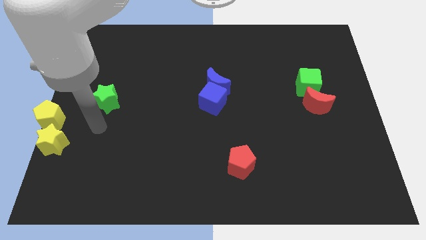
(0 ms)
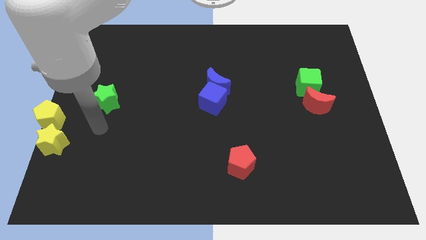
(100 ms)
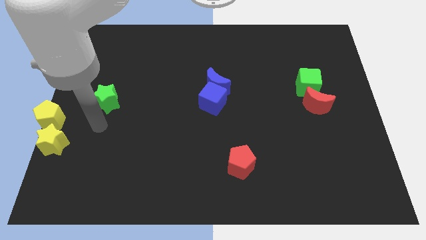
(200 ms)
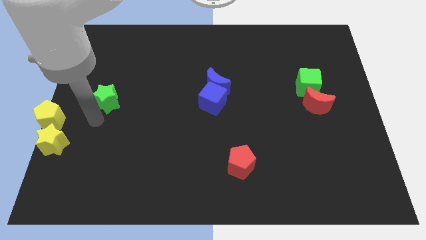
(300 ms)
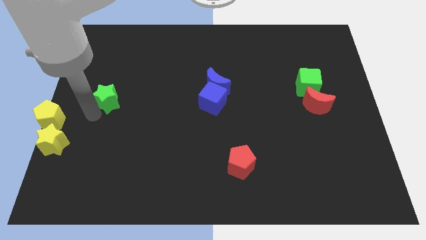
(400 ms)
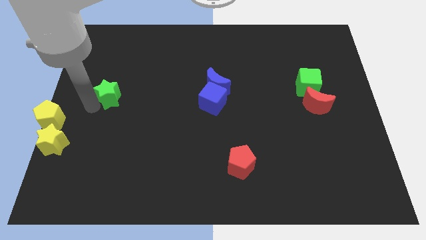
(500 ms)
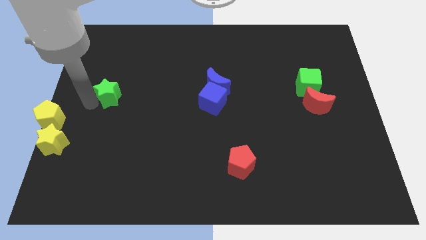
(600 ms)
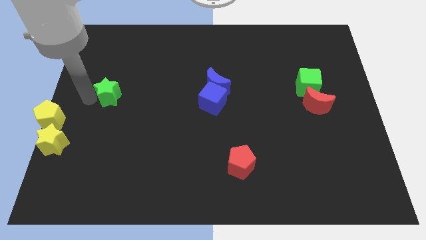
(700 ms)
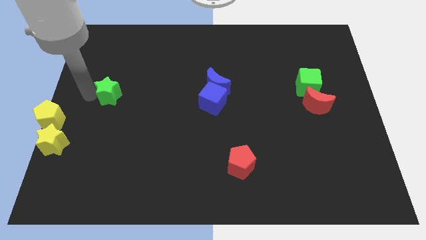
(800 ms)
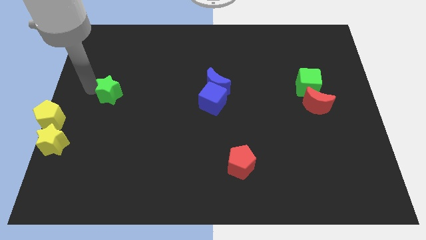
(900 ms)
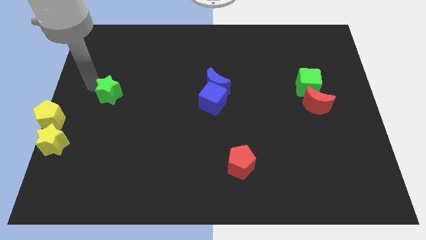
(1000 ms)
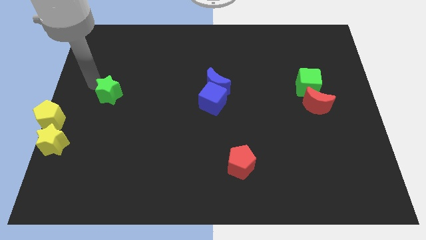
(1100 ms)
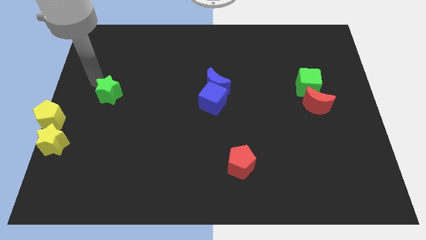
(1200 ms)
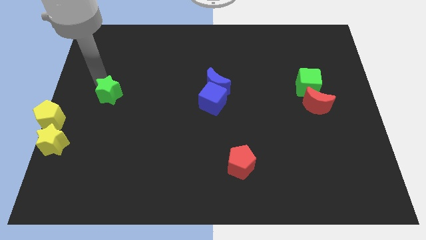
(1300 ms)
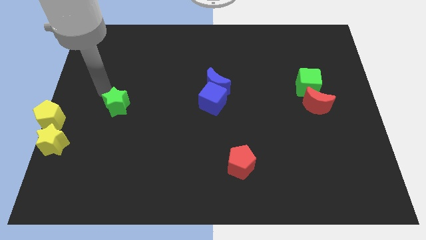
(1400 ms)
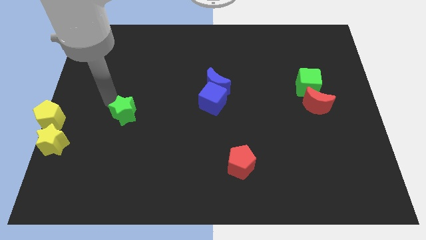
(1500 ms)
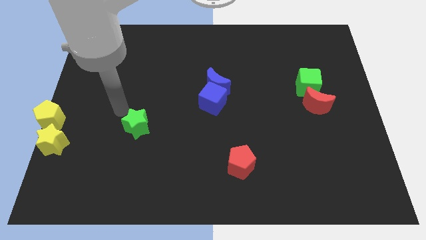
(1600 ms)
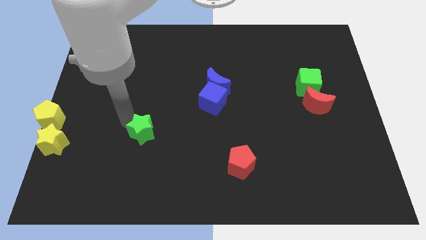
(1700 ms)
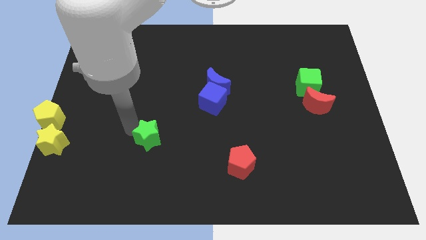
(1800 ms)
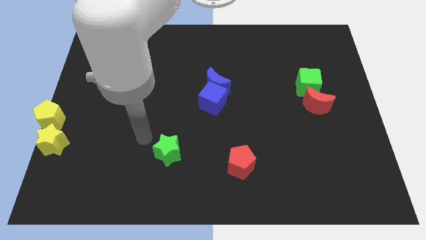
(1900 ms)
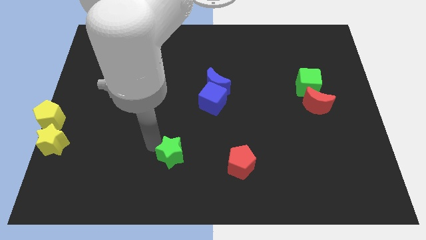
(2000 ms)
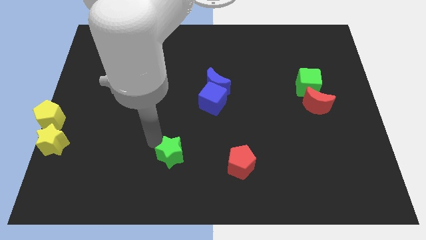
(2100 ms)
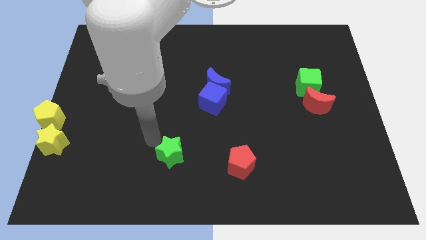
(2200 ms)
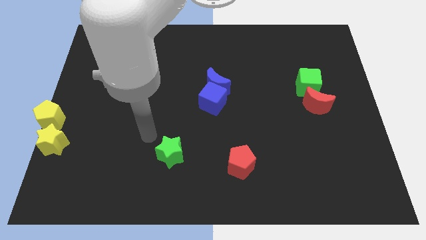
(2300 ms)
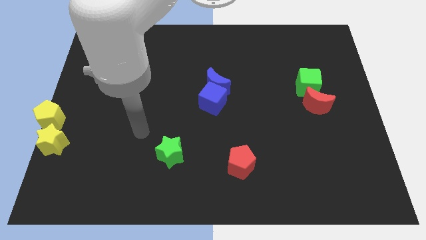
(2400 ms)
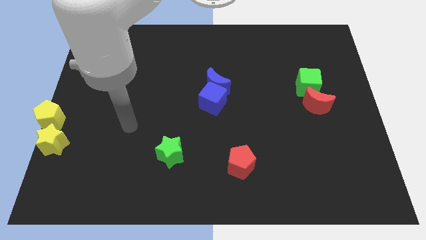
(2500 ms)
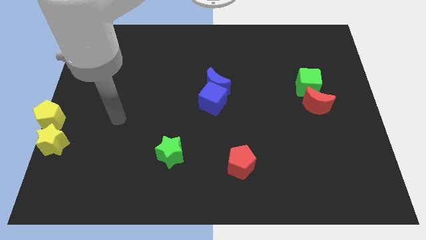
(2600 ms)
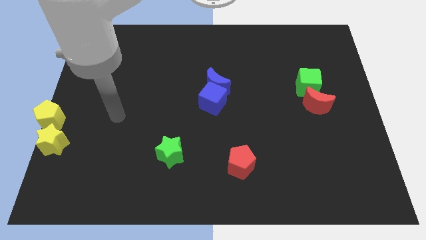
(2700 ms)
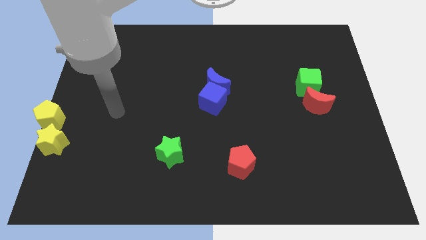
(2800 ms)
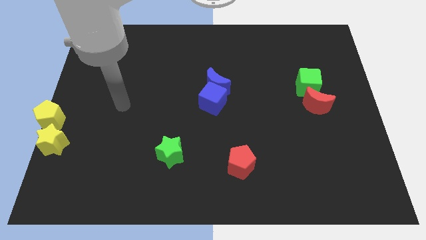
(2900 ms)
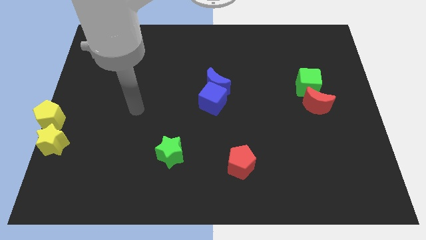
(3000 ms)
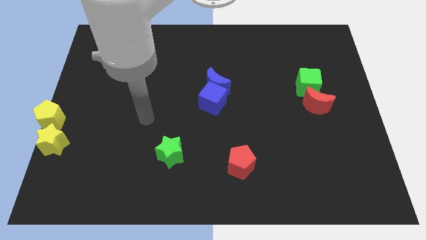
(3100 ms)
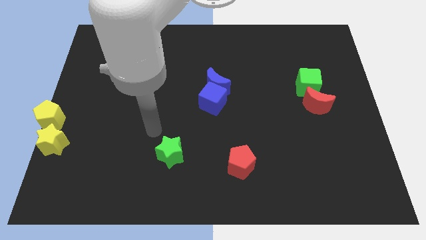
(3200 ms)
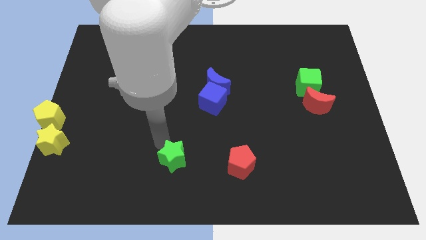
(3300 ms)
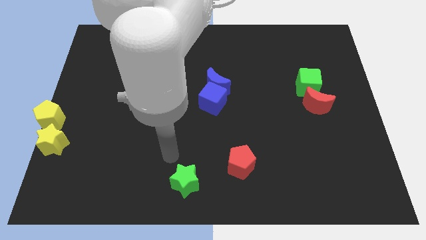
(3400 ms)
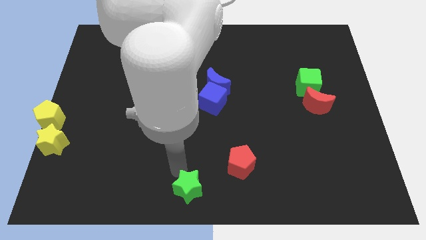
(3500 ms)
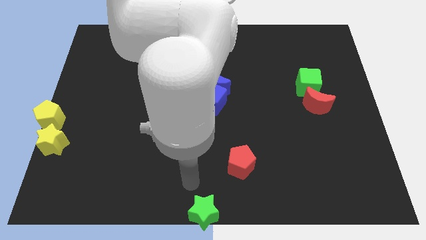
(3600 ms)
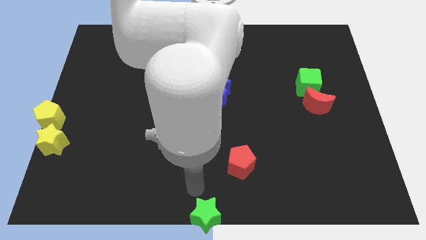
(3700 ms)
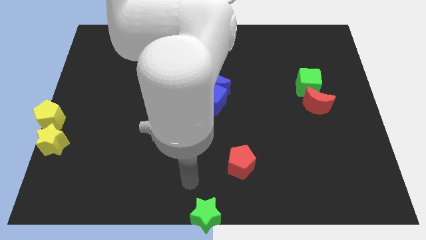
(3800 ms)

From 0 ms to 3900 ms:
move the green star to the bottom center of the board

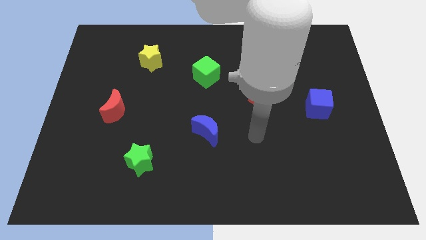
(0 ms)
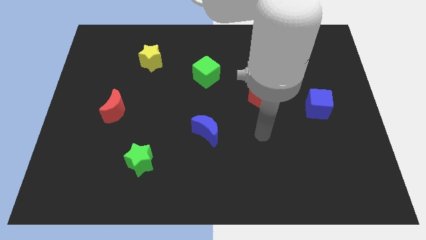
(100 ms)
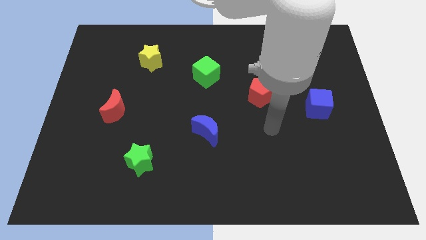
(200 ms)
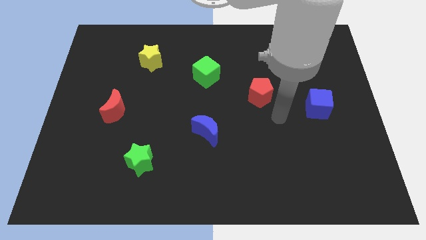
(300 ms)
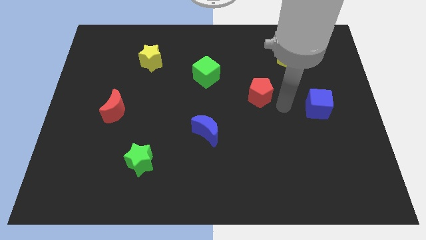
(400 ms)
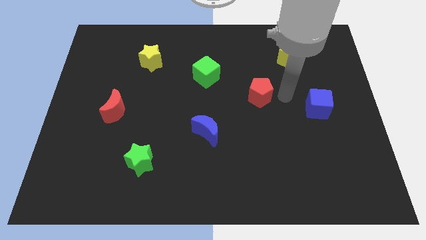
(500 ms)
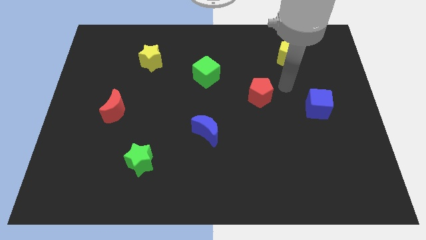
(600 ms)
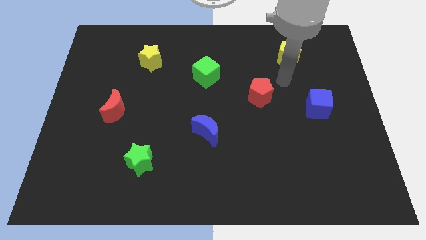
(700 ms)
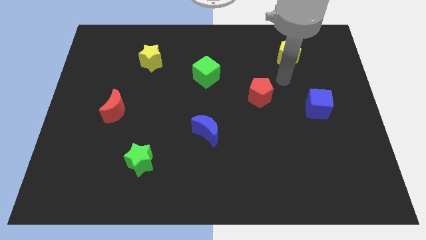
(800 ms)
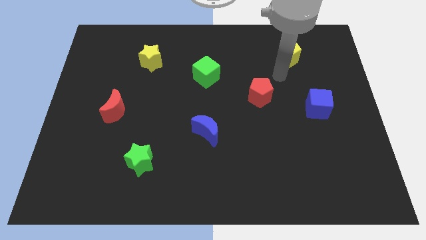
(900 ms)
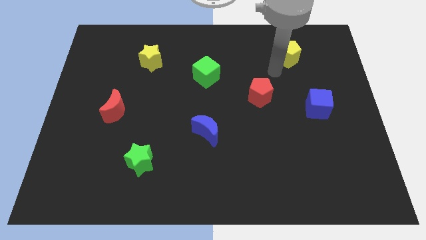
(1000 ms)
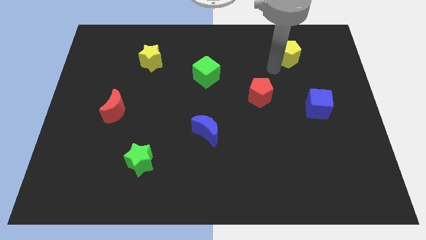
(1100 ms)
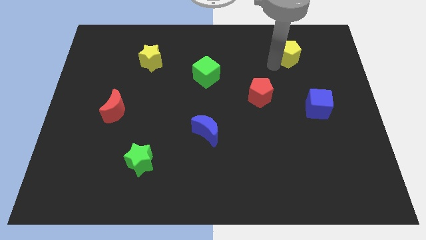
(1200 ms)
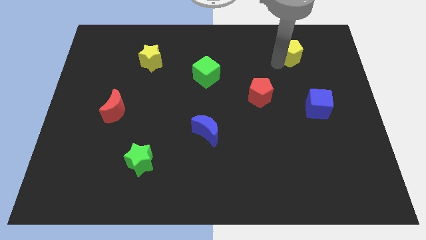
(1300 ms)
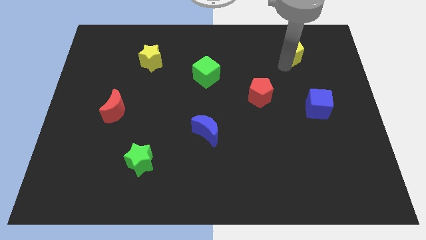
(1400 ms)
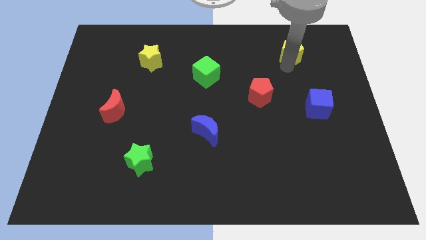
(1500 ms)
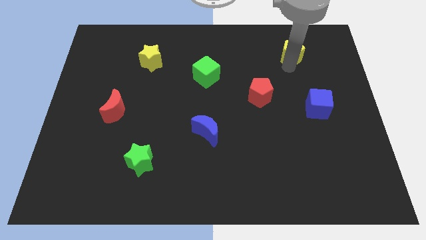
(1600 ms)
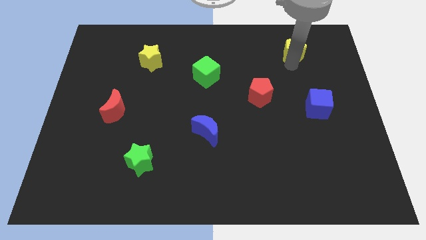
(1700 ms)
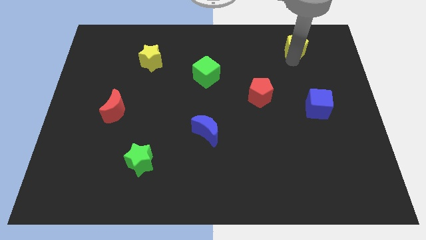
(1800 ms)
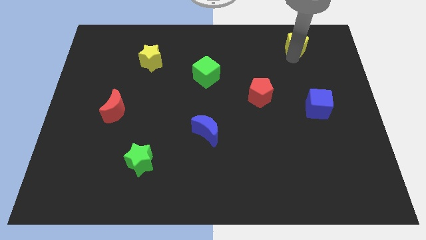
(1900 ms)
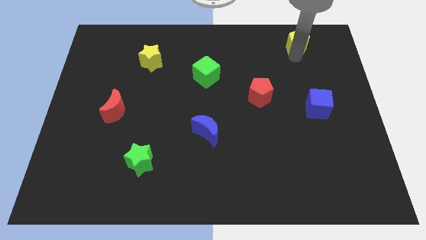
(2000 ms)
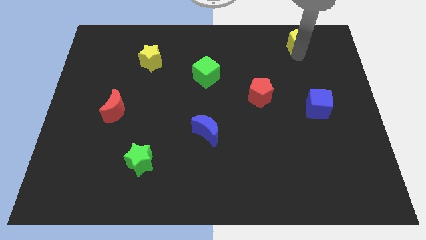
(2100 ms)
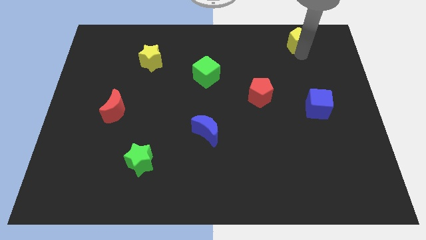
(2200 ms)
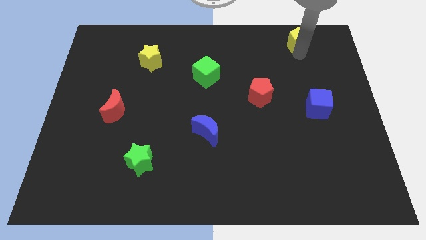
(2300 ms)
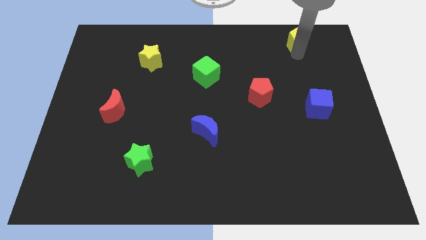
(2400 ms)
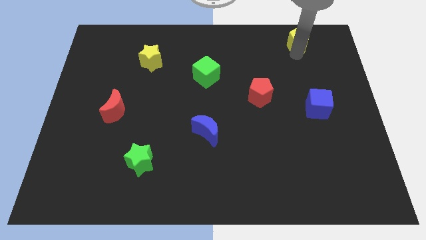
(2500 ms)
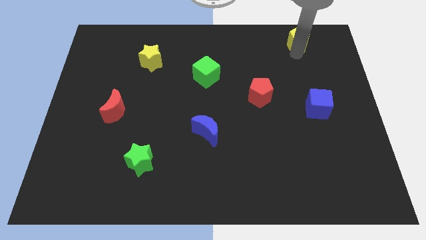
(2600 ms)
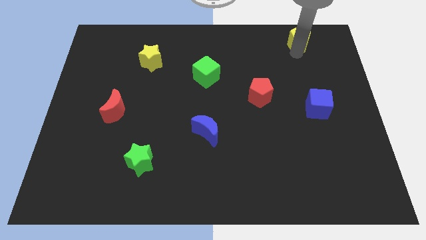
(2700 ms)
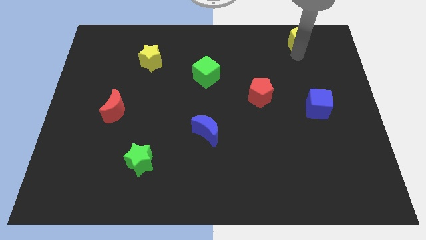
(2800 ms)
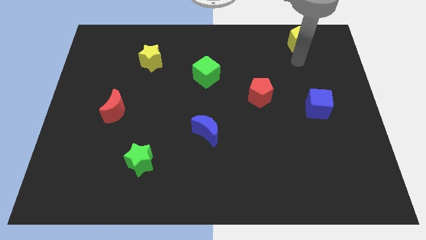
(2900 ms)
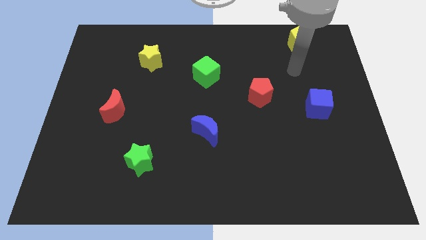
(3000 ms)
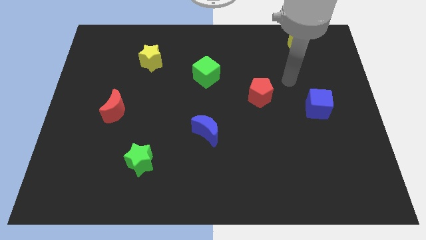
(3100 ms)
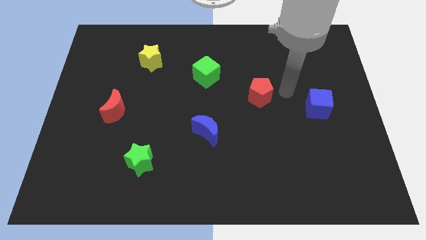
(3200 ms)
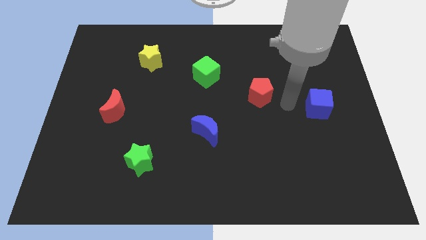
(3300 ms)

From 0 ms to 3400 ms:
push pentagon to the top right side of the board

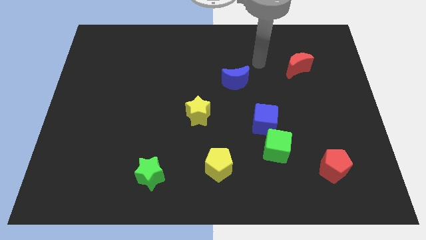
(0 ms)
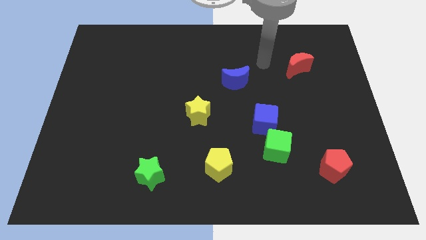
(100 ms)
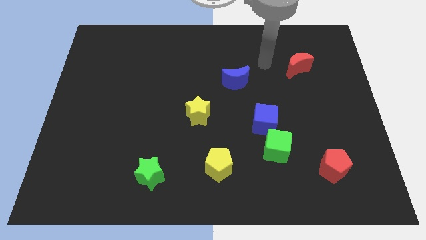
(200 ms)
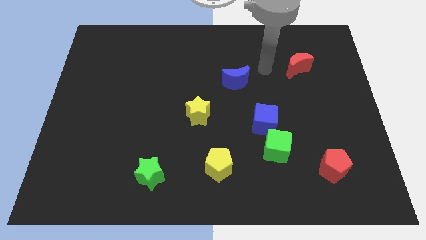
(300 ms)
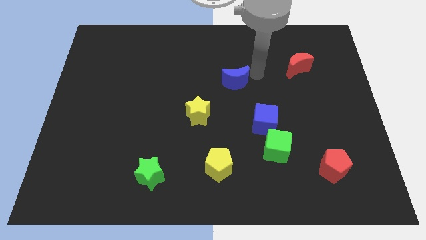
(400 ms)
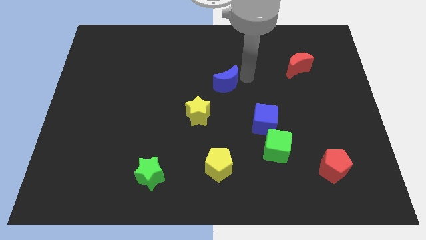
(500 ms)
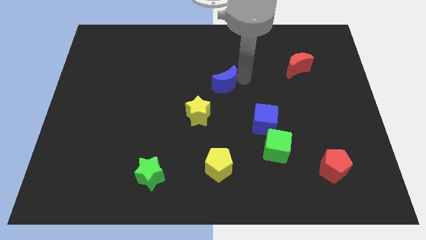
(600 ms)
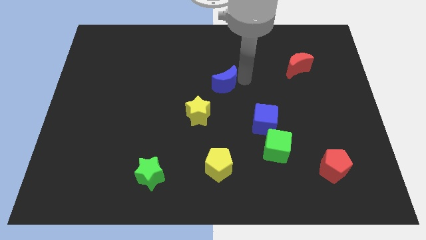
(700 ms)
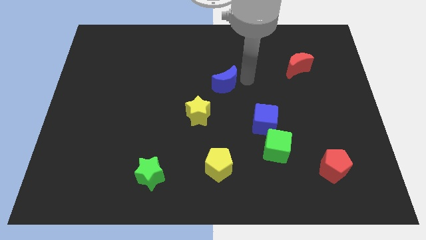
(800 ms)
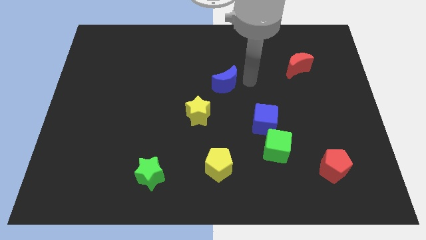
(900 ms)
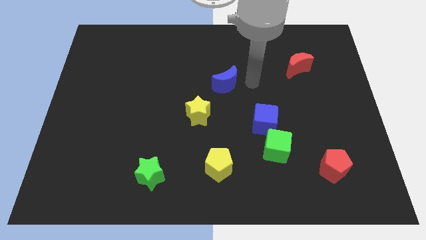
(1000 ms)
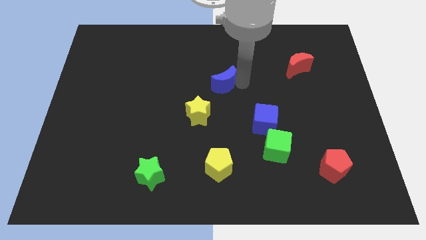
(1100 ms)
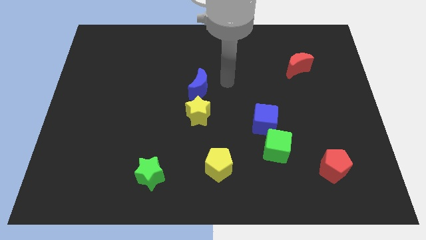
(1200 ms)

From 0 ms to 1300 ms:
place the blue moon above the yellow star

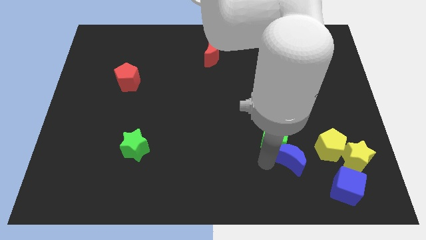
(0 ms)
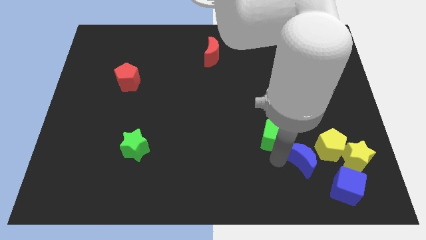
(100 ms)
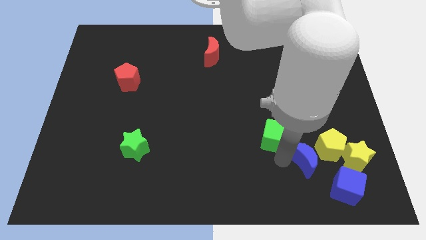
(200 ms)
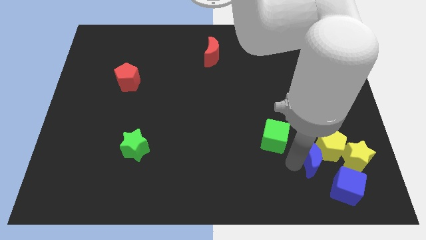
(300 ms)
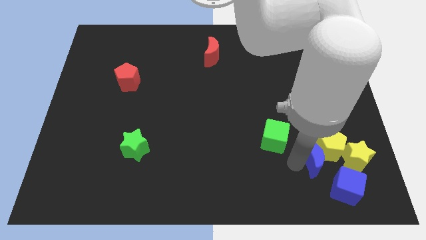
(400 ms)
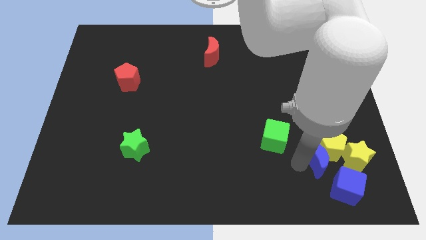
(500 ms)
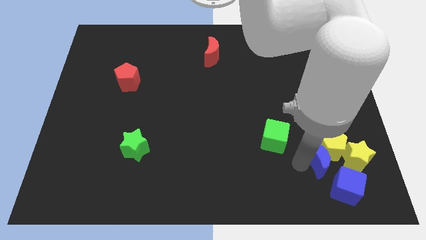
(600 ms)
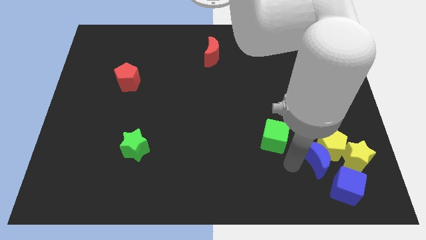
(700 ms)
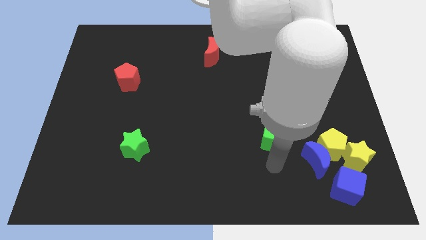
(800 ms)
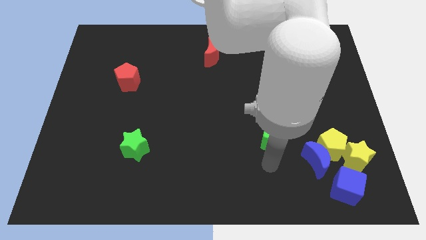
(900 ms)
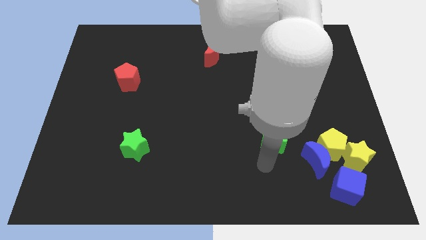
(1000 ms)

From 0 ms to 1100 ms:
push the blue crescent into the yellow pentagon
